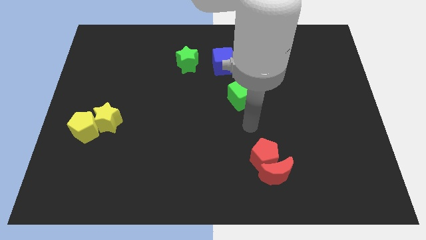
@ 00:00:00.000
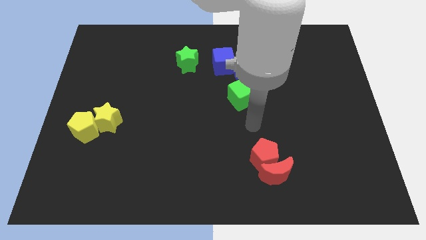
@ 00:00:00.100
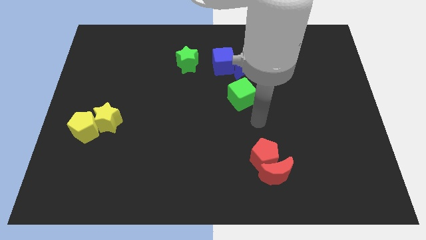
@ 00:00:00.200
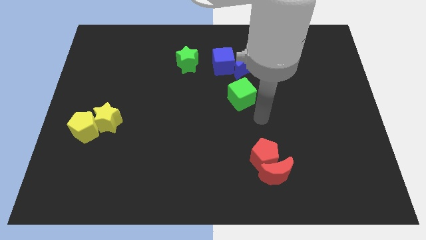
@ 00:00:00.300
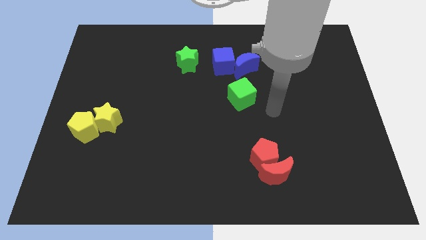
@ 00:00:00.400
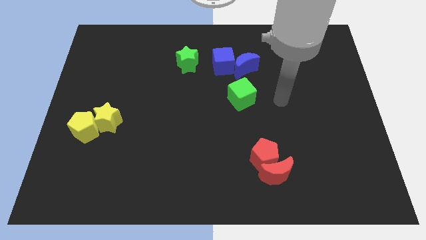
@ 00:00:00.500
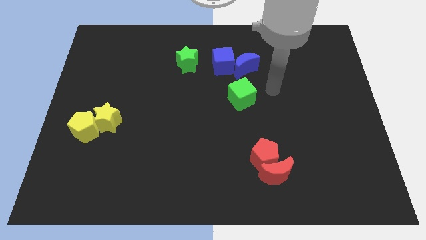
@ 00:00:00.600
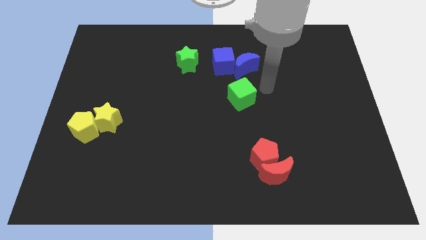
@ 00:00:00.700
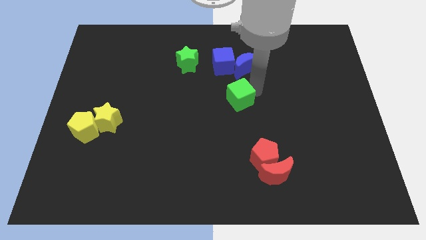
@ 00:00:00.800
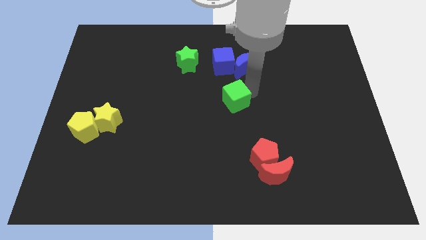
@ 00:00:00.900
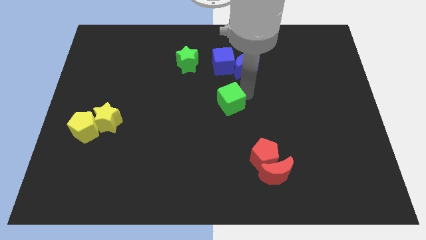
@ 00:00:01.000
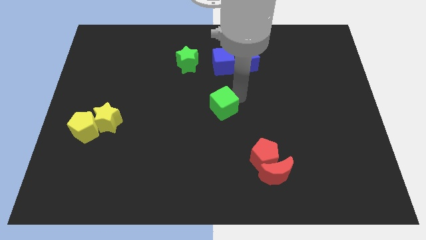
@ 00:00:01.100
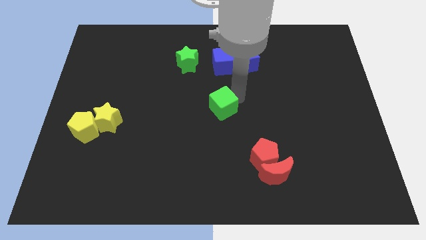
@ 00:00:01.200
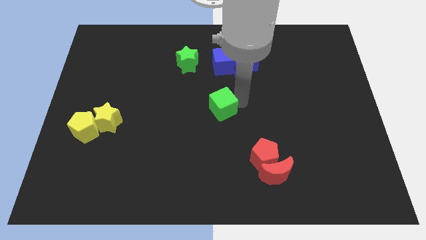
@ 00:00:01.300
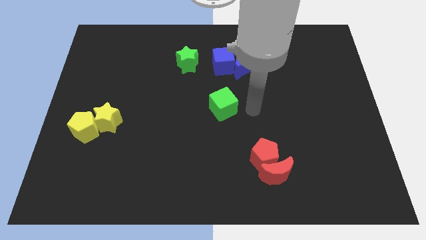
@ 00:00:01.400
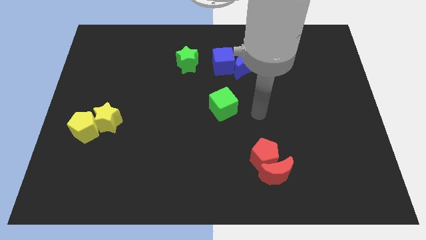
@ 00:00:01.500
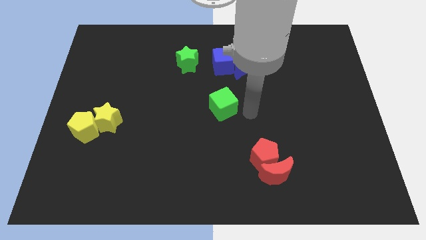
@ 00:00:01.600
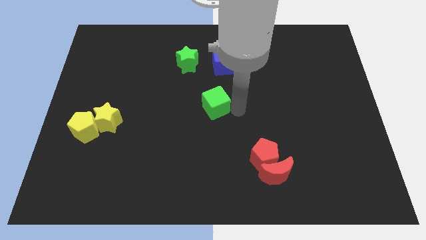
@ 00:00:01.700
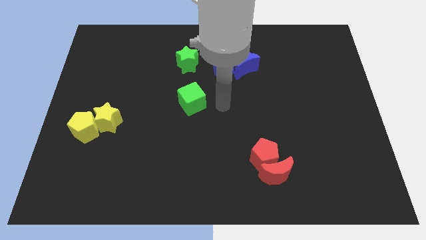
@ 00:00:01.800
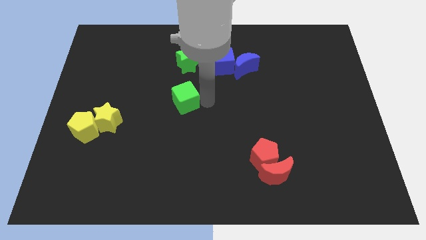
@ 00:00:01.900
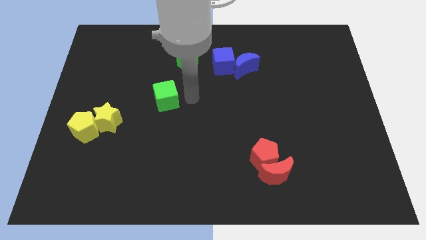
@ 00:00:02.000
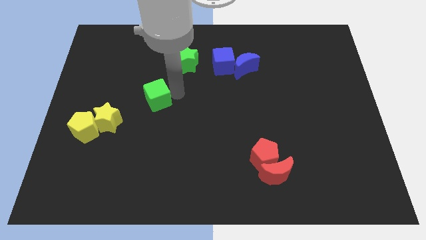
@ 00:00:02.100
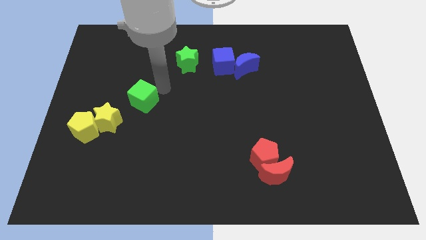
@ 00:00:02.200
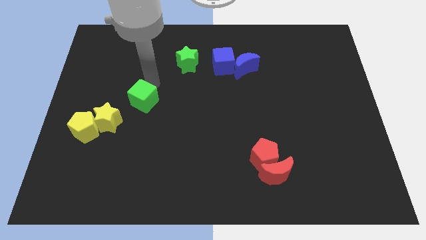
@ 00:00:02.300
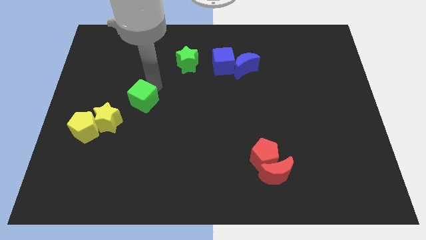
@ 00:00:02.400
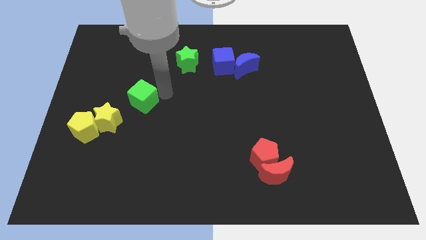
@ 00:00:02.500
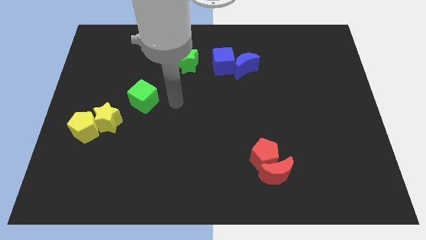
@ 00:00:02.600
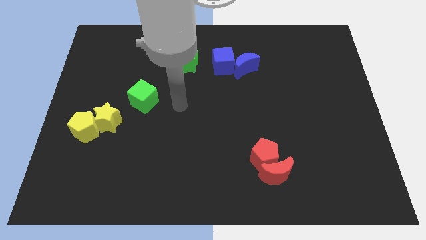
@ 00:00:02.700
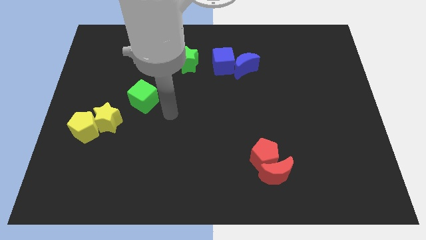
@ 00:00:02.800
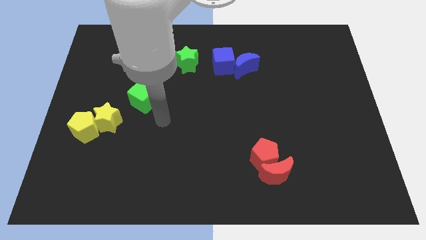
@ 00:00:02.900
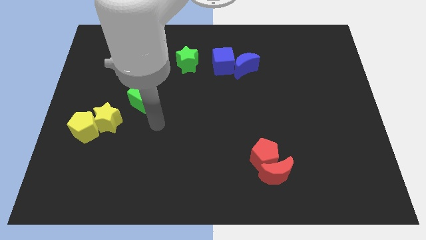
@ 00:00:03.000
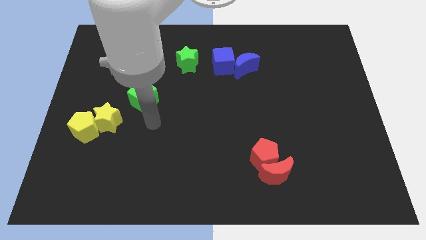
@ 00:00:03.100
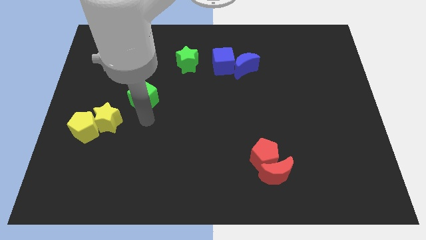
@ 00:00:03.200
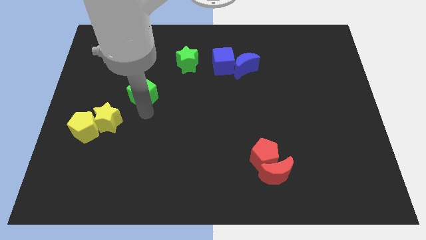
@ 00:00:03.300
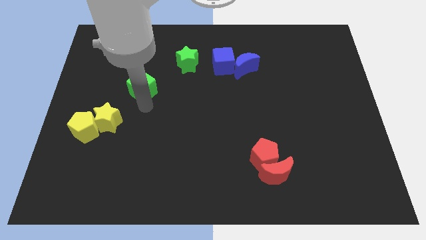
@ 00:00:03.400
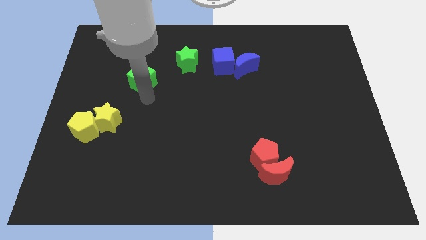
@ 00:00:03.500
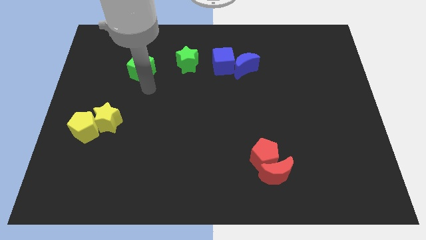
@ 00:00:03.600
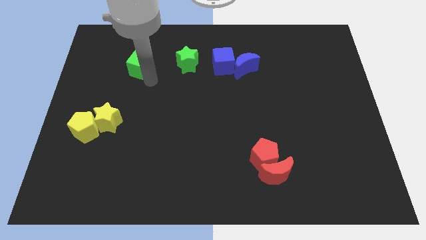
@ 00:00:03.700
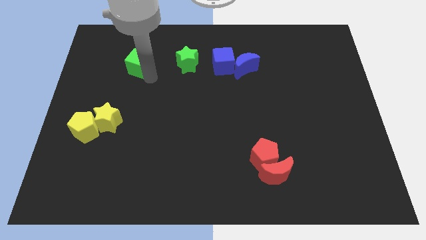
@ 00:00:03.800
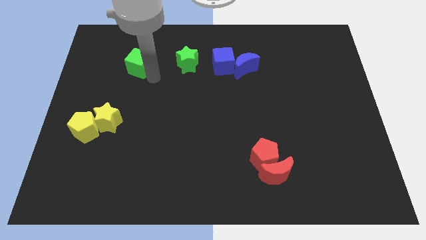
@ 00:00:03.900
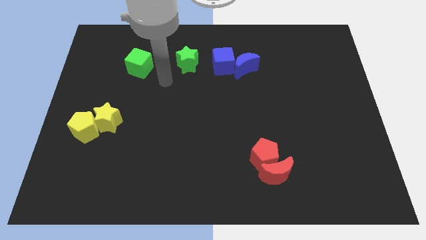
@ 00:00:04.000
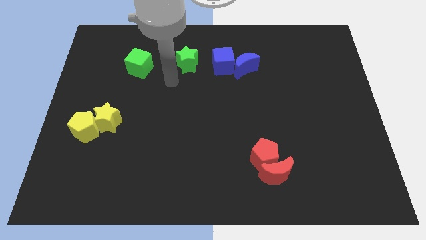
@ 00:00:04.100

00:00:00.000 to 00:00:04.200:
place the green cube left to the green star

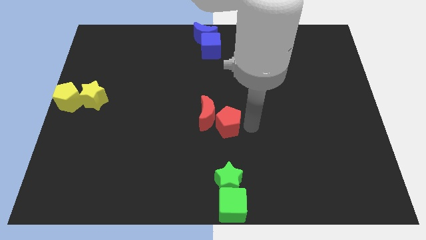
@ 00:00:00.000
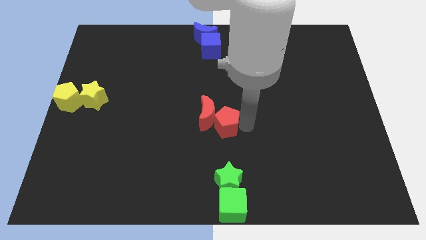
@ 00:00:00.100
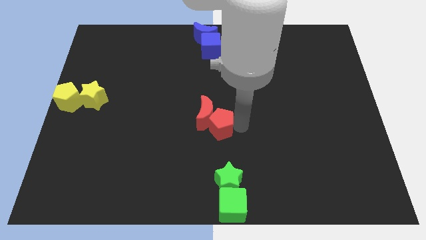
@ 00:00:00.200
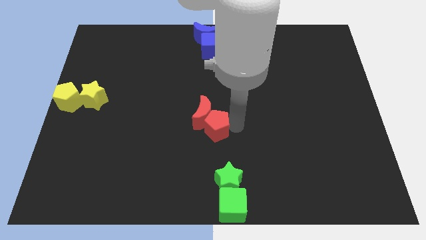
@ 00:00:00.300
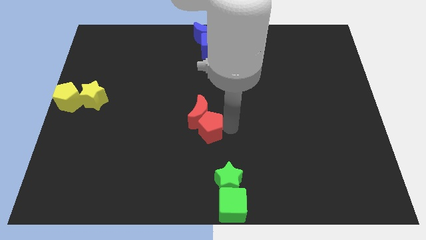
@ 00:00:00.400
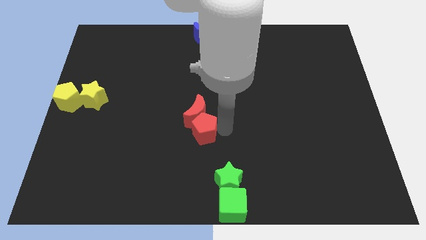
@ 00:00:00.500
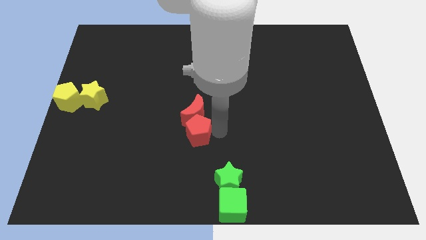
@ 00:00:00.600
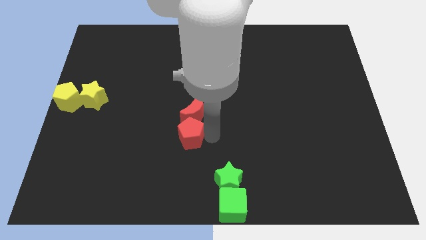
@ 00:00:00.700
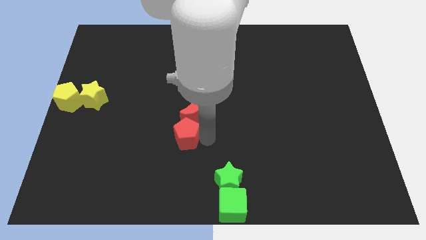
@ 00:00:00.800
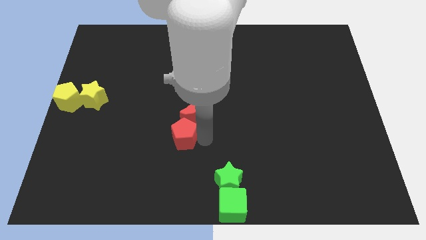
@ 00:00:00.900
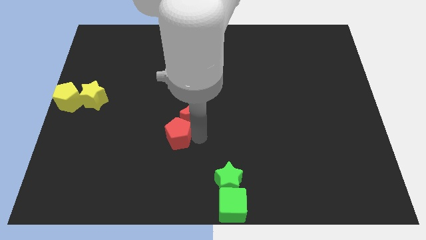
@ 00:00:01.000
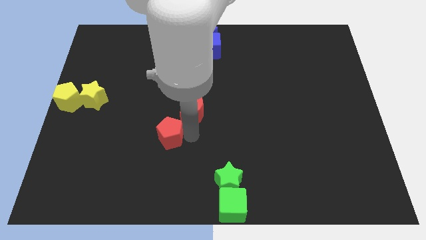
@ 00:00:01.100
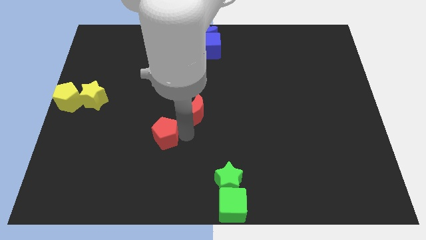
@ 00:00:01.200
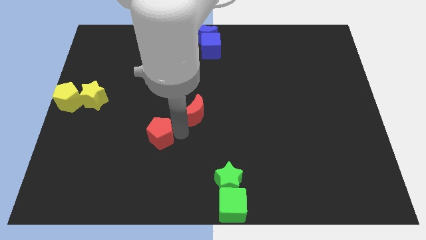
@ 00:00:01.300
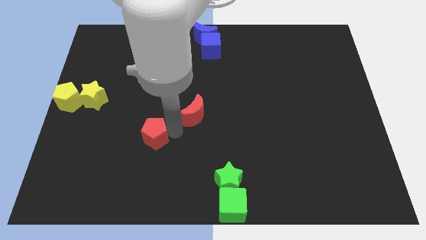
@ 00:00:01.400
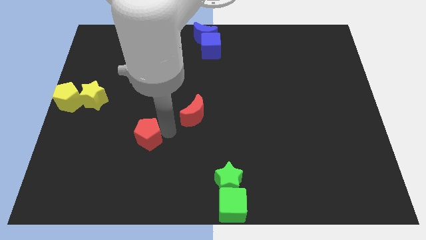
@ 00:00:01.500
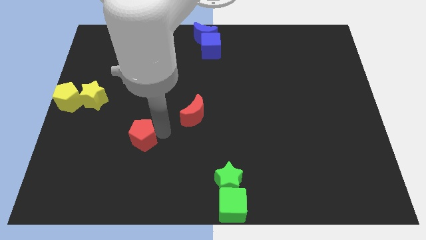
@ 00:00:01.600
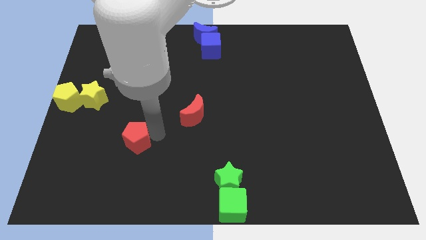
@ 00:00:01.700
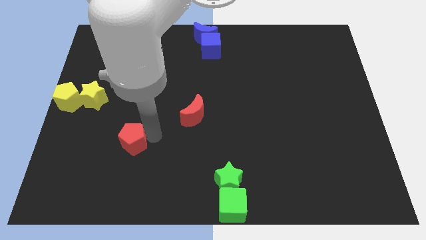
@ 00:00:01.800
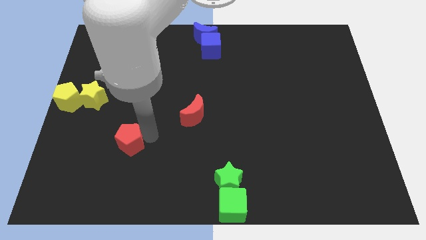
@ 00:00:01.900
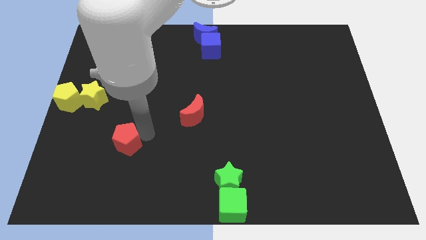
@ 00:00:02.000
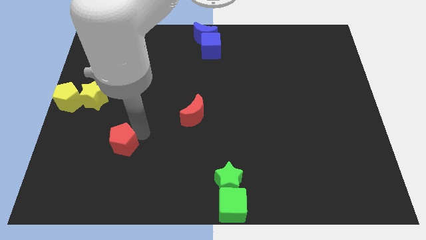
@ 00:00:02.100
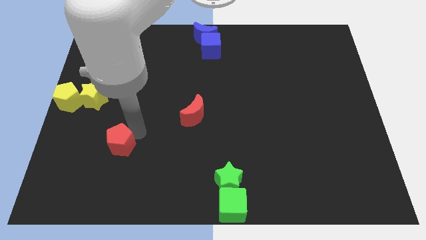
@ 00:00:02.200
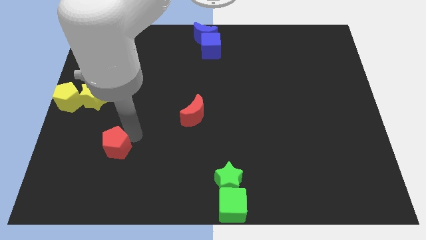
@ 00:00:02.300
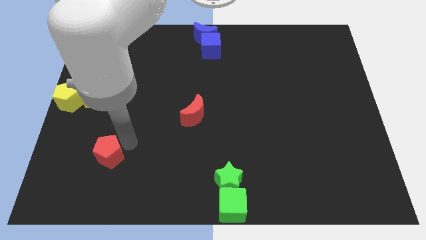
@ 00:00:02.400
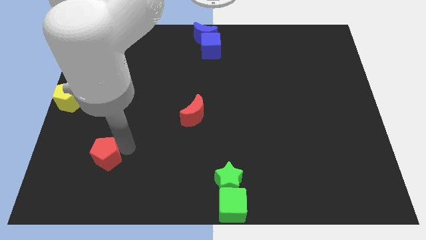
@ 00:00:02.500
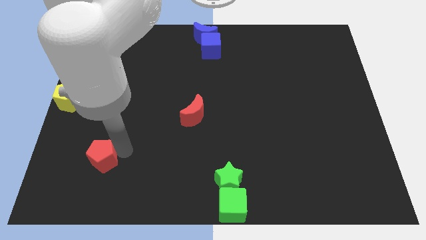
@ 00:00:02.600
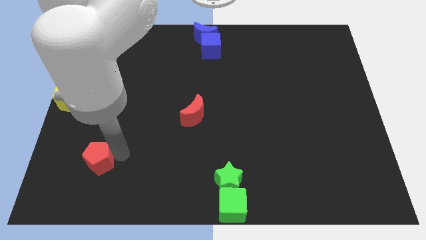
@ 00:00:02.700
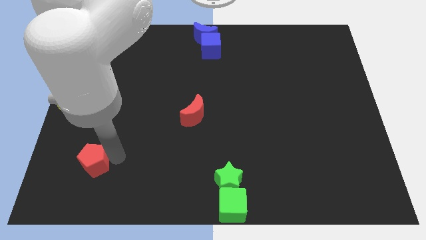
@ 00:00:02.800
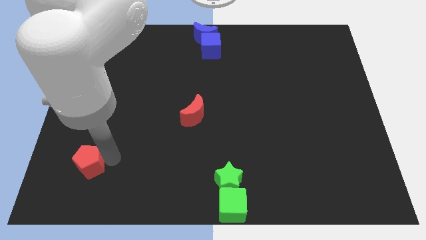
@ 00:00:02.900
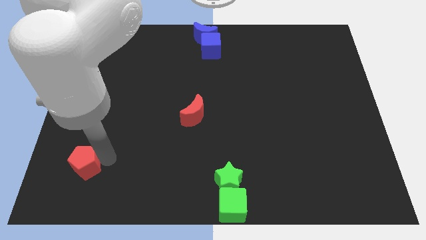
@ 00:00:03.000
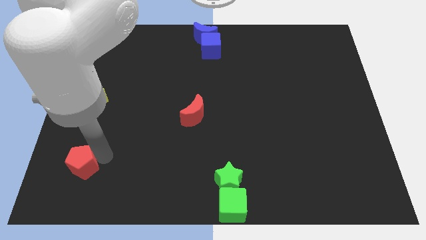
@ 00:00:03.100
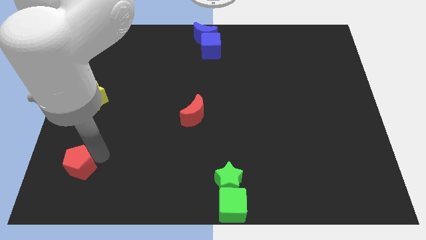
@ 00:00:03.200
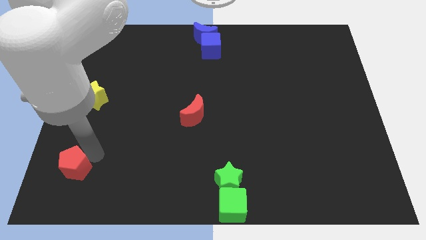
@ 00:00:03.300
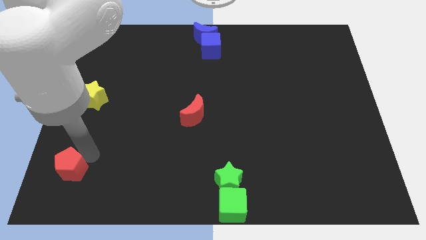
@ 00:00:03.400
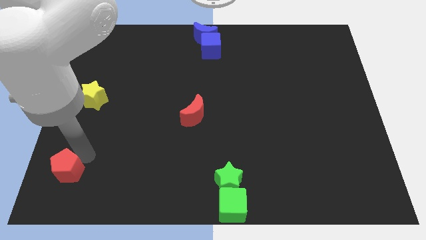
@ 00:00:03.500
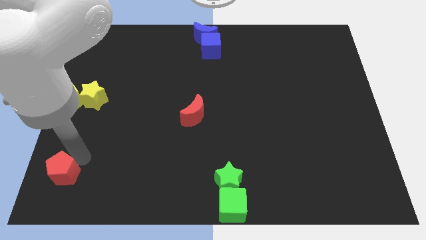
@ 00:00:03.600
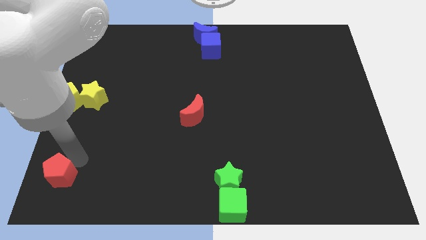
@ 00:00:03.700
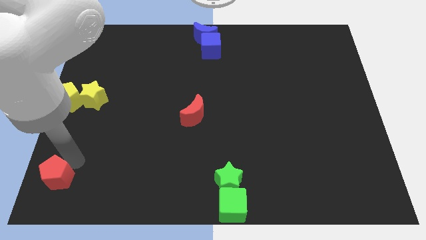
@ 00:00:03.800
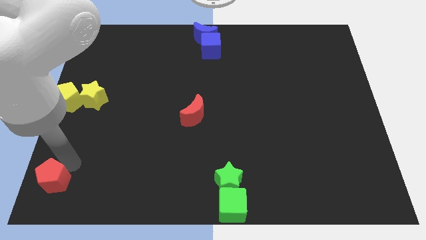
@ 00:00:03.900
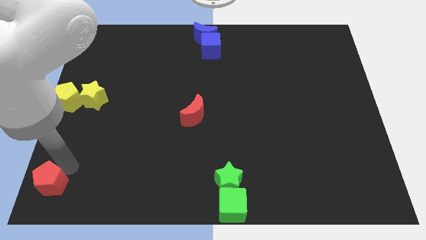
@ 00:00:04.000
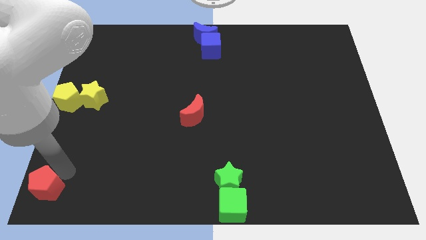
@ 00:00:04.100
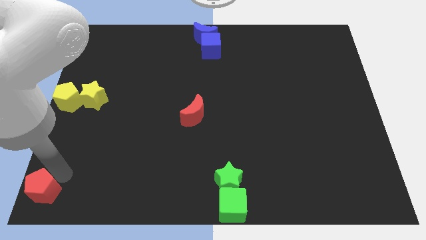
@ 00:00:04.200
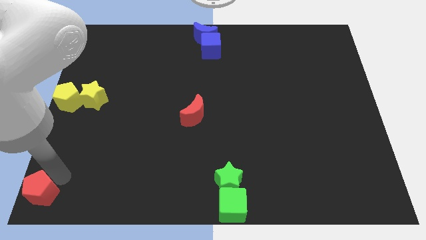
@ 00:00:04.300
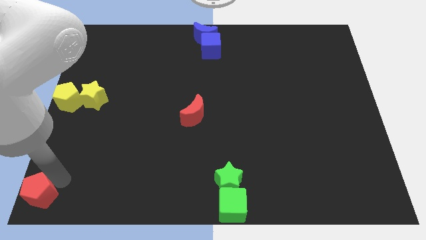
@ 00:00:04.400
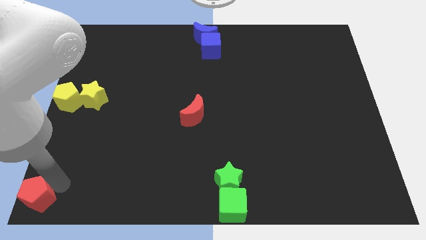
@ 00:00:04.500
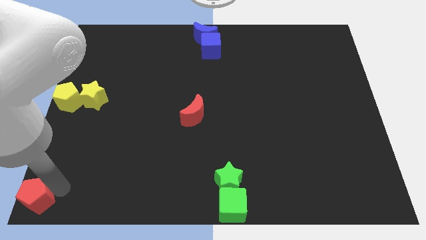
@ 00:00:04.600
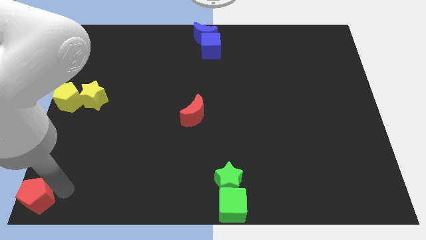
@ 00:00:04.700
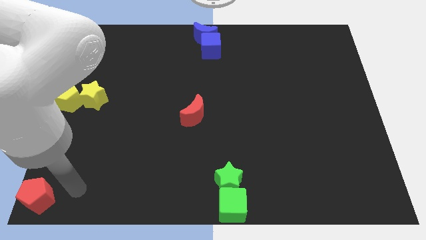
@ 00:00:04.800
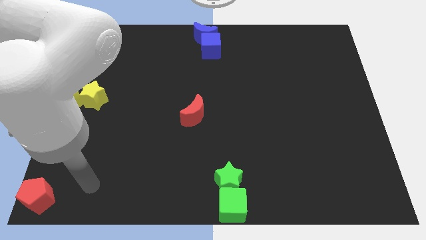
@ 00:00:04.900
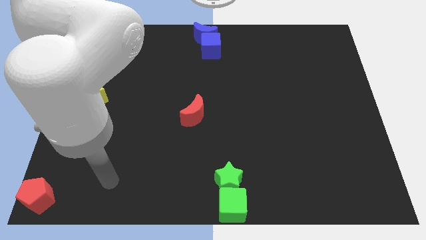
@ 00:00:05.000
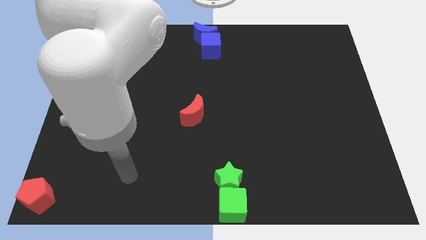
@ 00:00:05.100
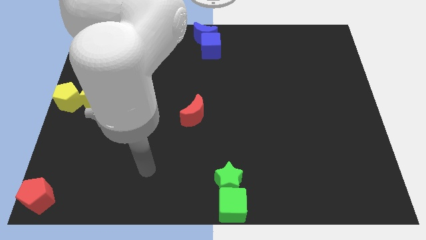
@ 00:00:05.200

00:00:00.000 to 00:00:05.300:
push the red pentagon at the bottom left corner
